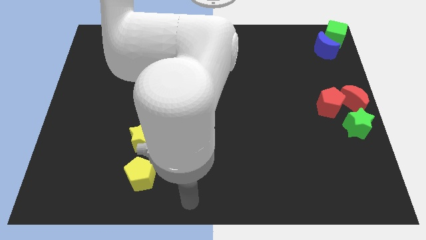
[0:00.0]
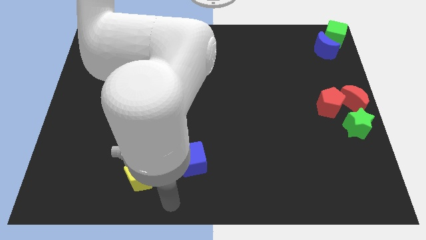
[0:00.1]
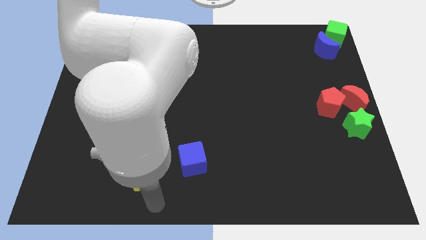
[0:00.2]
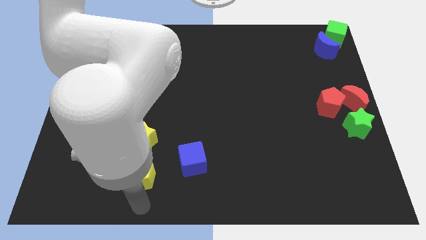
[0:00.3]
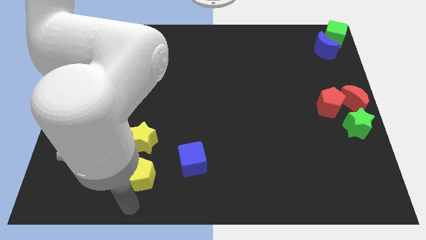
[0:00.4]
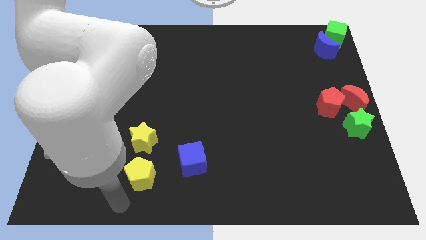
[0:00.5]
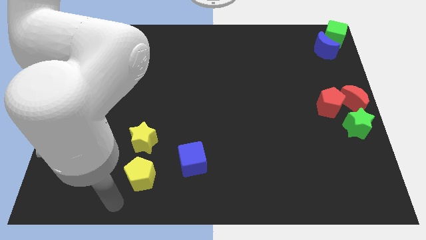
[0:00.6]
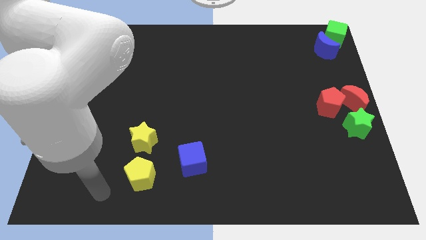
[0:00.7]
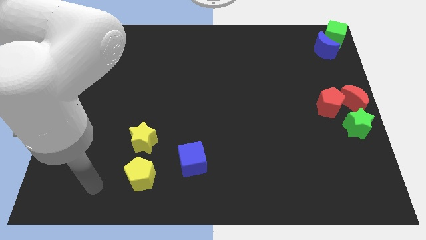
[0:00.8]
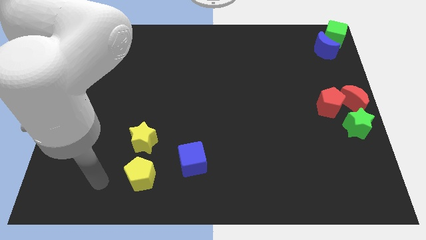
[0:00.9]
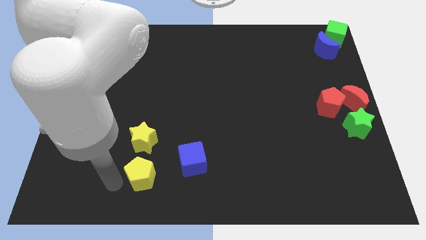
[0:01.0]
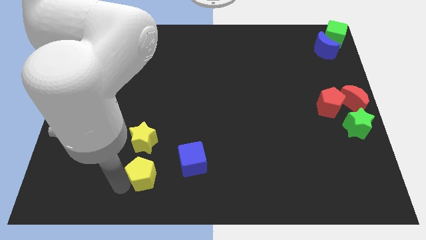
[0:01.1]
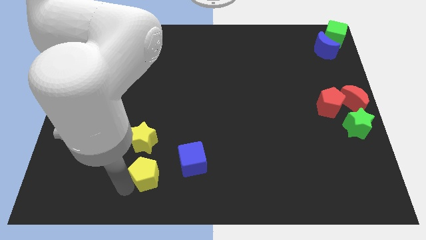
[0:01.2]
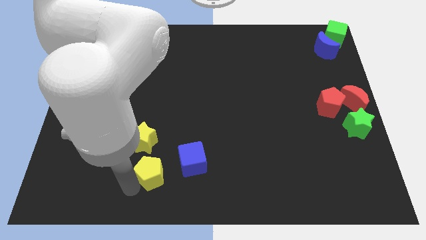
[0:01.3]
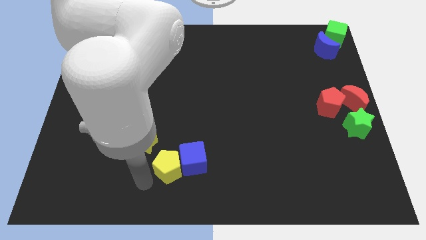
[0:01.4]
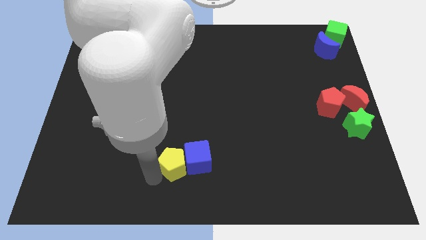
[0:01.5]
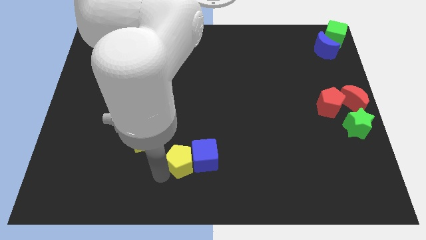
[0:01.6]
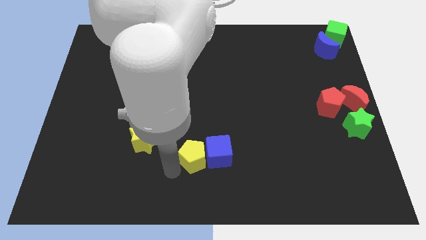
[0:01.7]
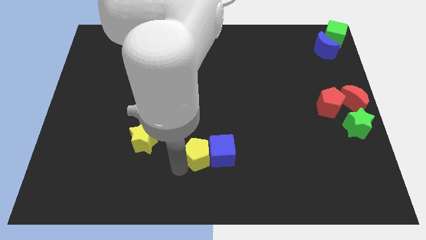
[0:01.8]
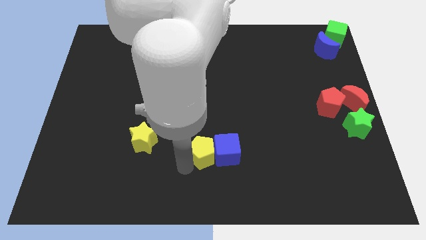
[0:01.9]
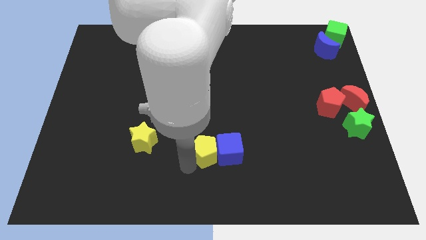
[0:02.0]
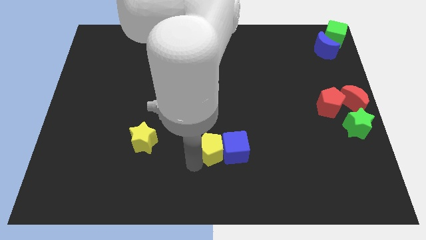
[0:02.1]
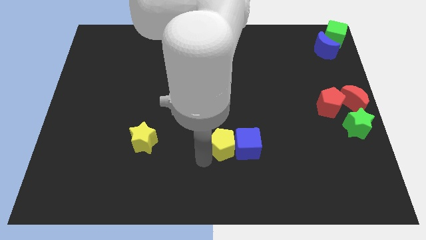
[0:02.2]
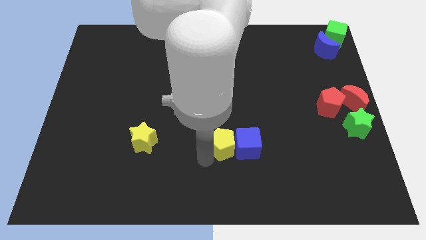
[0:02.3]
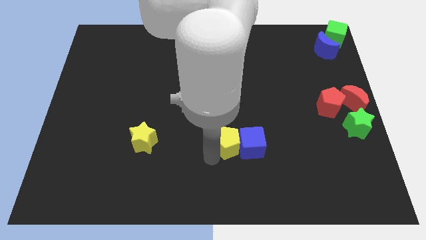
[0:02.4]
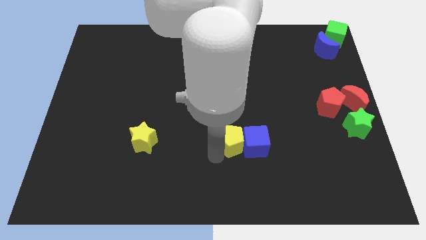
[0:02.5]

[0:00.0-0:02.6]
push the yellow pentagon and blue cube towards the right side

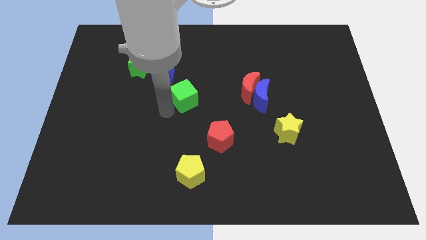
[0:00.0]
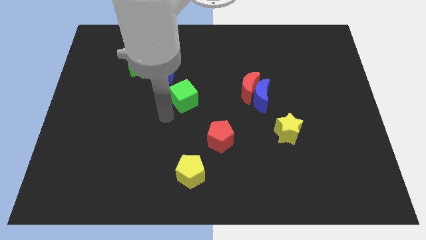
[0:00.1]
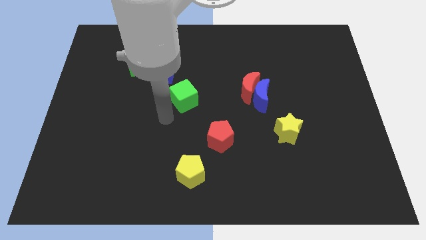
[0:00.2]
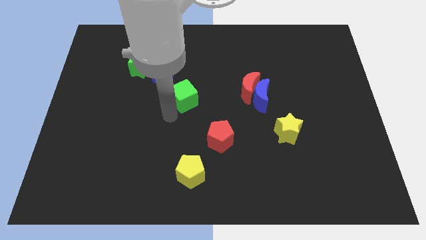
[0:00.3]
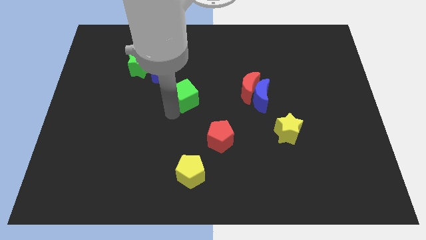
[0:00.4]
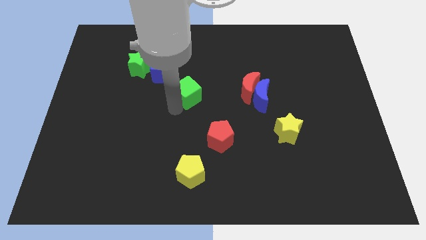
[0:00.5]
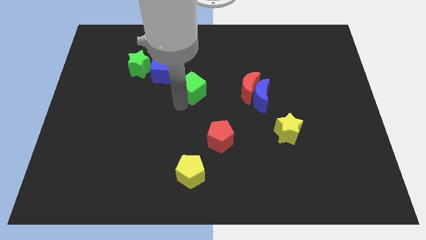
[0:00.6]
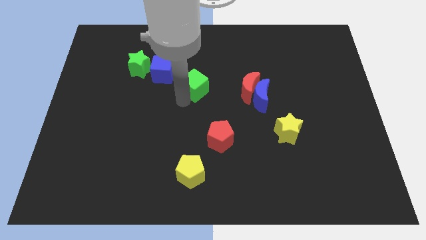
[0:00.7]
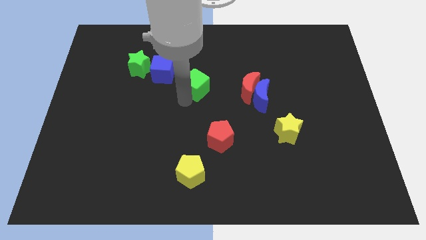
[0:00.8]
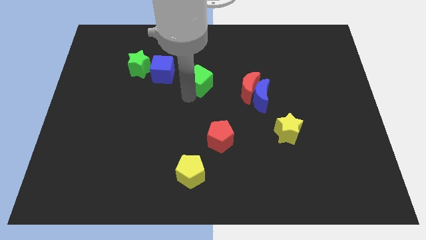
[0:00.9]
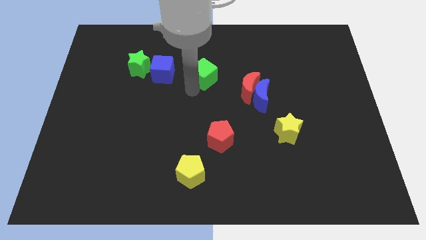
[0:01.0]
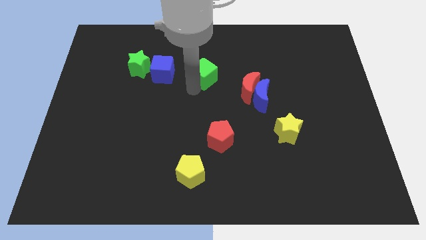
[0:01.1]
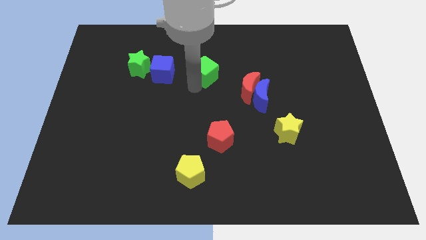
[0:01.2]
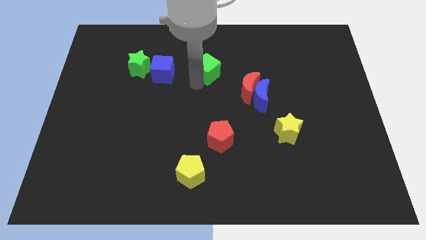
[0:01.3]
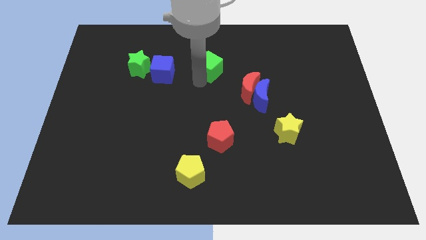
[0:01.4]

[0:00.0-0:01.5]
move green cube to the right of blue cube

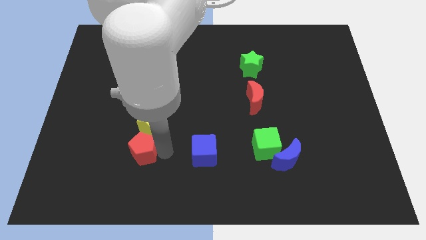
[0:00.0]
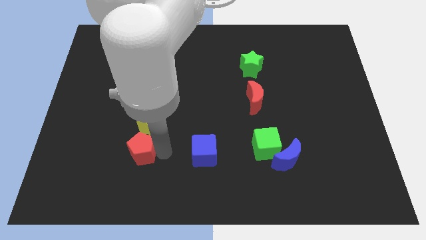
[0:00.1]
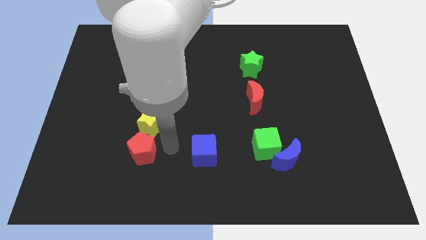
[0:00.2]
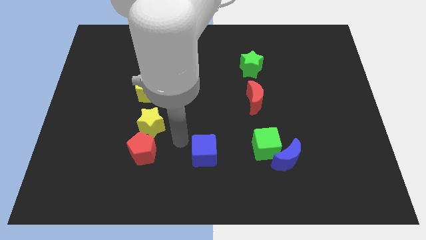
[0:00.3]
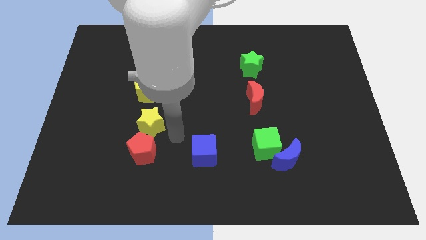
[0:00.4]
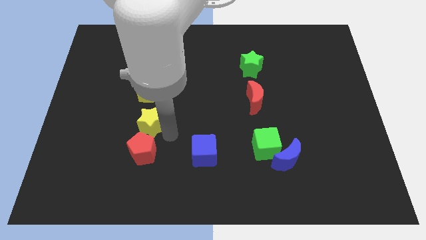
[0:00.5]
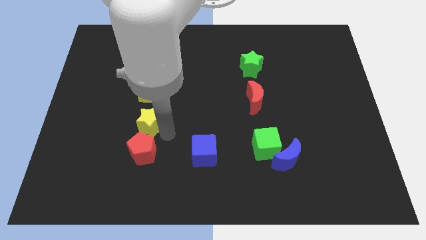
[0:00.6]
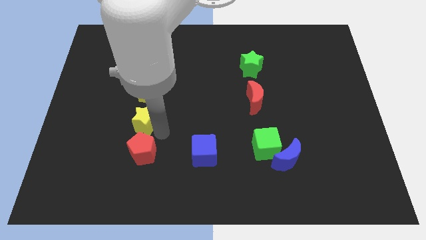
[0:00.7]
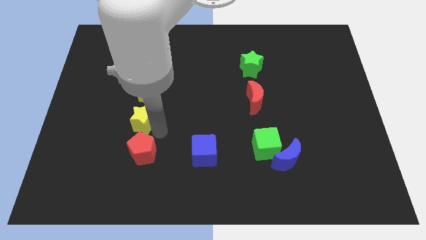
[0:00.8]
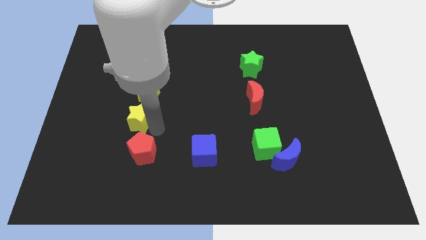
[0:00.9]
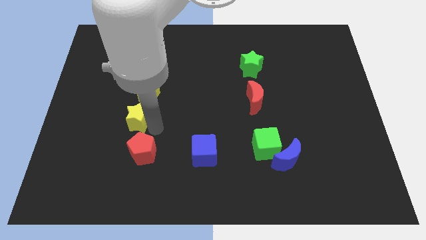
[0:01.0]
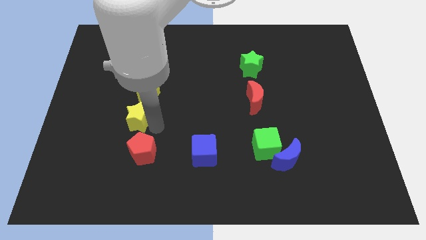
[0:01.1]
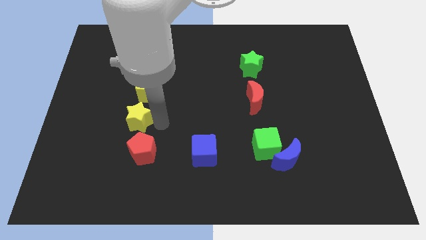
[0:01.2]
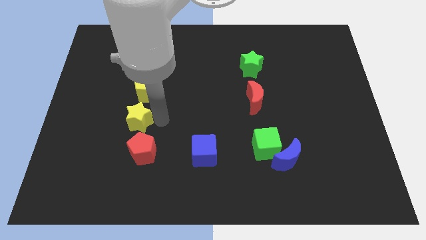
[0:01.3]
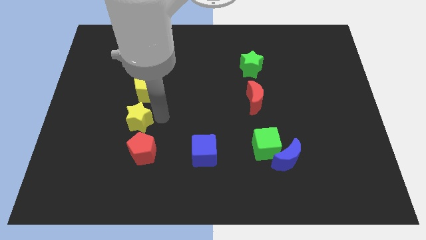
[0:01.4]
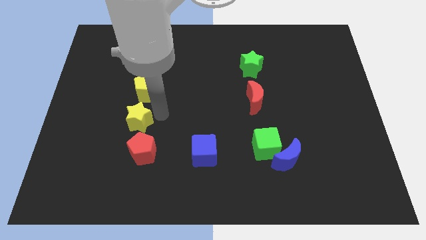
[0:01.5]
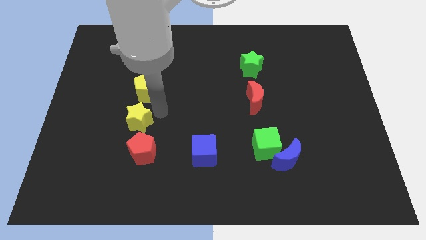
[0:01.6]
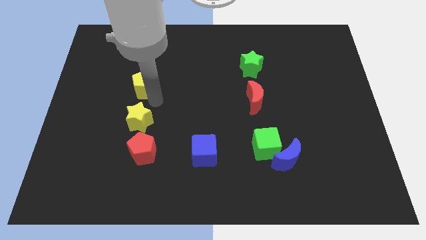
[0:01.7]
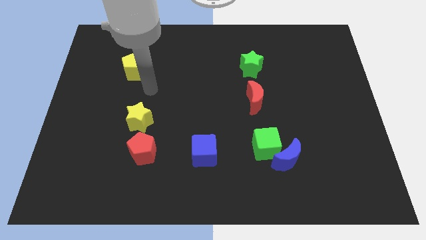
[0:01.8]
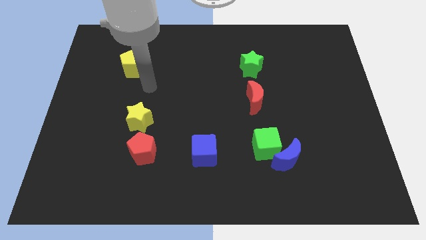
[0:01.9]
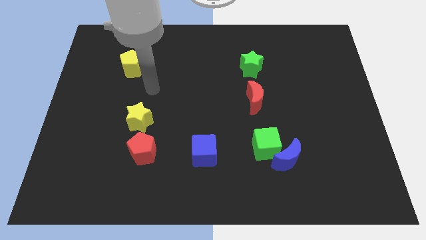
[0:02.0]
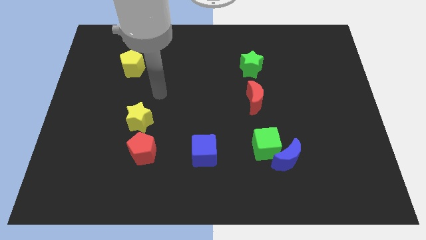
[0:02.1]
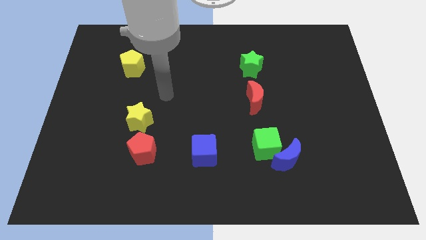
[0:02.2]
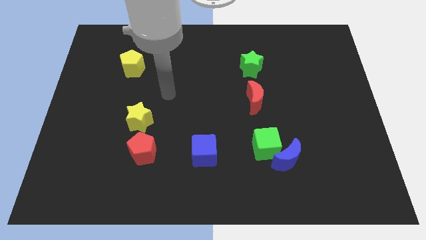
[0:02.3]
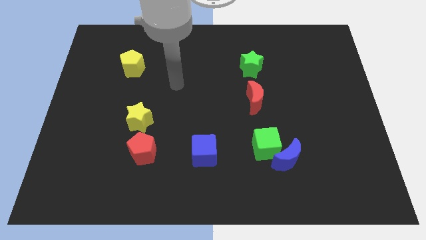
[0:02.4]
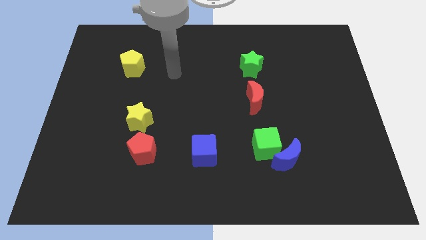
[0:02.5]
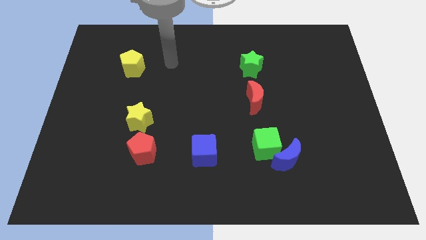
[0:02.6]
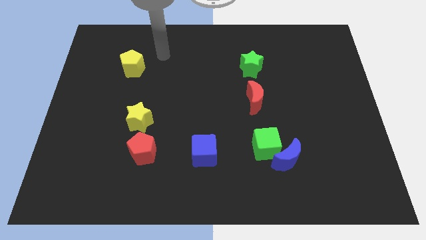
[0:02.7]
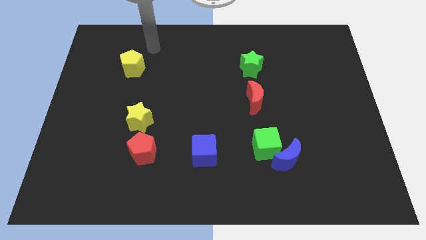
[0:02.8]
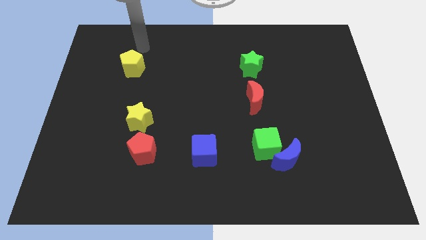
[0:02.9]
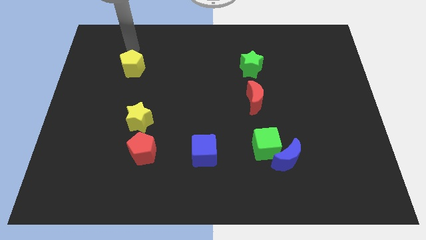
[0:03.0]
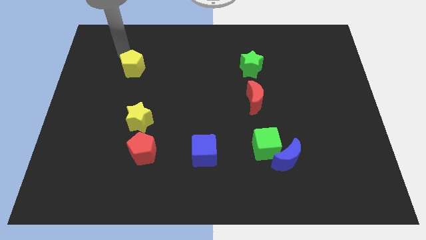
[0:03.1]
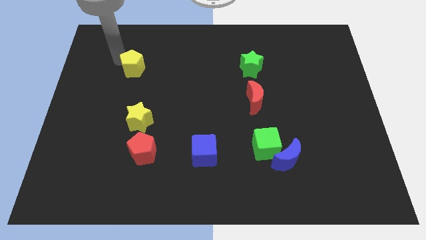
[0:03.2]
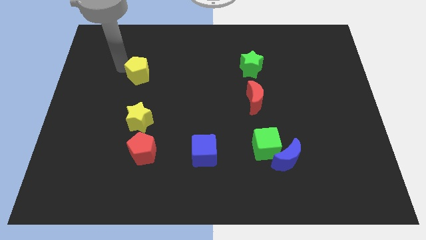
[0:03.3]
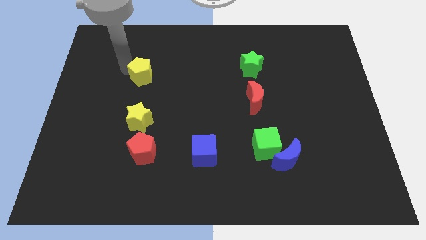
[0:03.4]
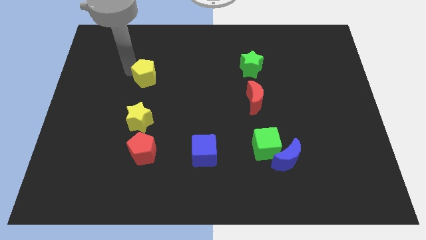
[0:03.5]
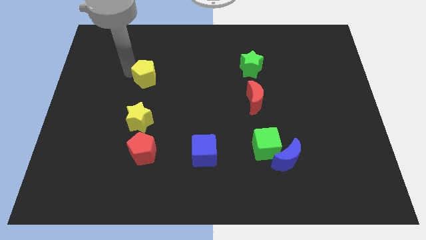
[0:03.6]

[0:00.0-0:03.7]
move yellow pentagon to the center

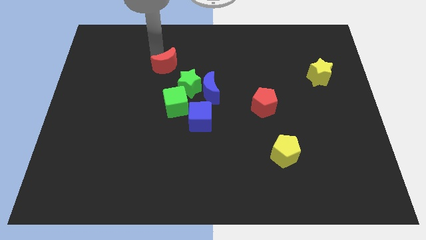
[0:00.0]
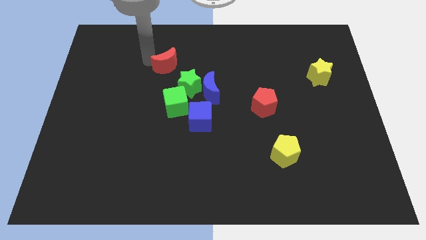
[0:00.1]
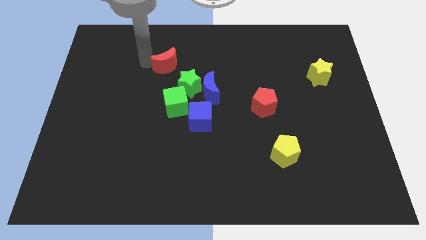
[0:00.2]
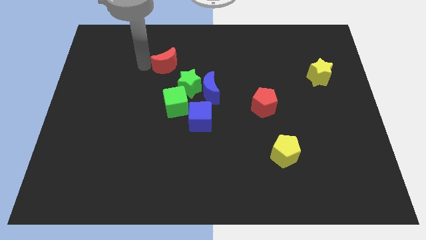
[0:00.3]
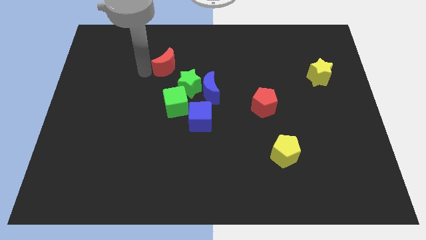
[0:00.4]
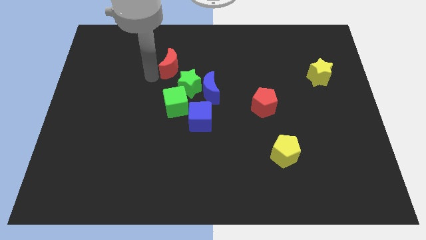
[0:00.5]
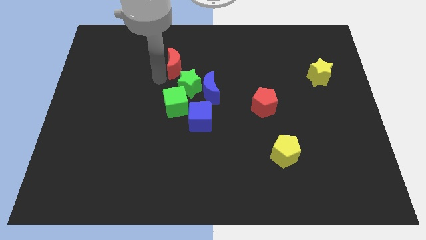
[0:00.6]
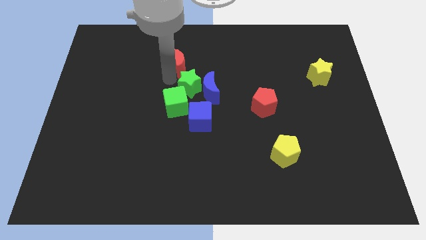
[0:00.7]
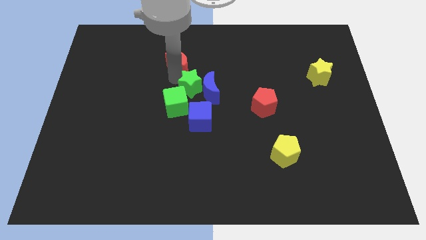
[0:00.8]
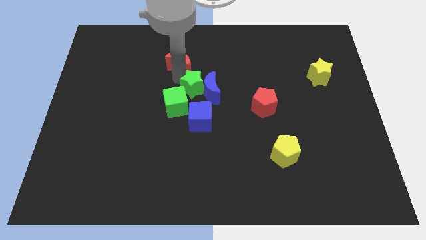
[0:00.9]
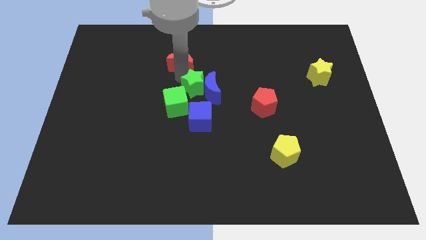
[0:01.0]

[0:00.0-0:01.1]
move red moon to the green star

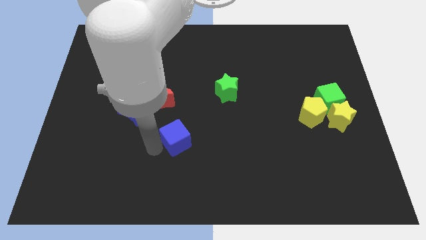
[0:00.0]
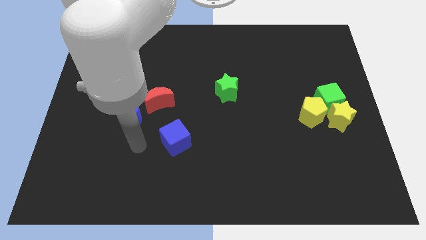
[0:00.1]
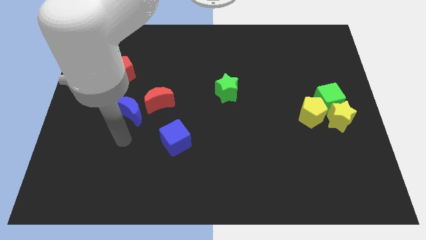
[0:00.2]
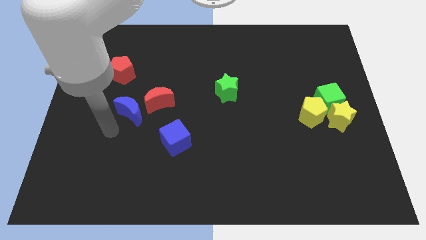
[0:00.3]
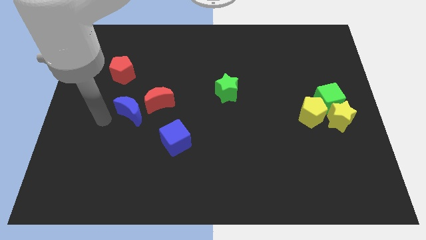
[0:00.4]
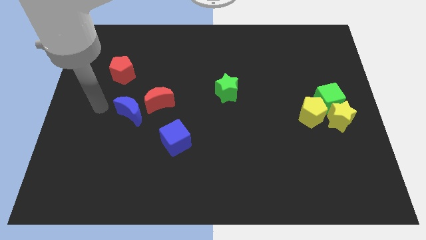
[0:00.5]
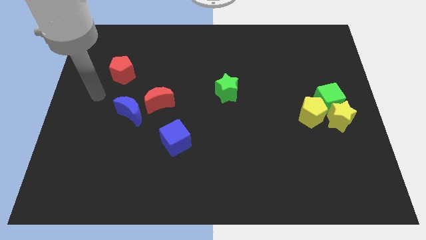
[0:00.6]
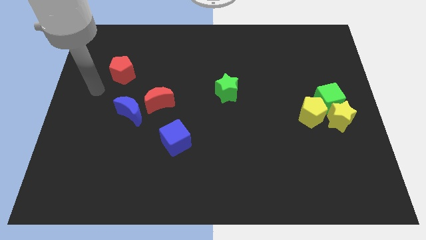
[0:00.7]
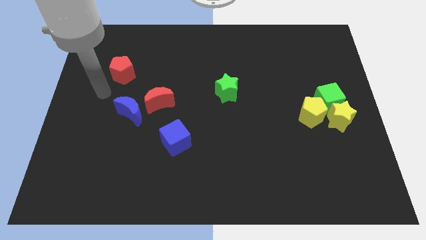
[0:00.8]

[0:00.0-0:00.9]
move your arm away from blue cube
